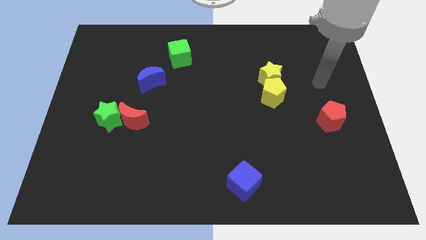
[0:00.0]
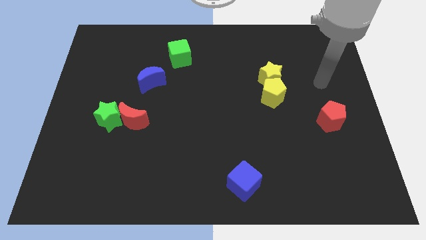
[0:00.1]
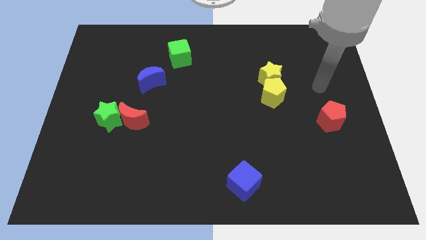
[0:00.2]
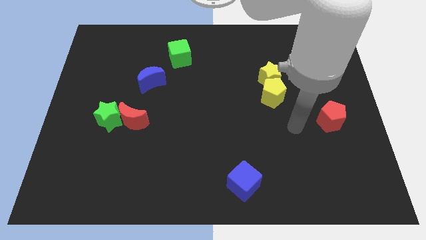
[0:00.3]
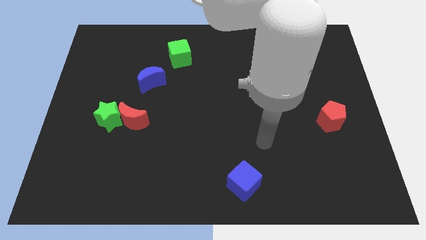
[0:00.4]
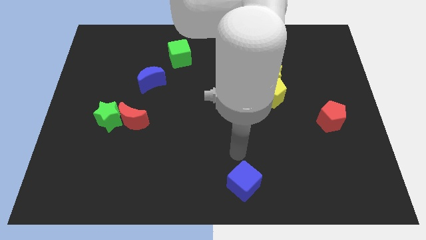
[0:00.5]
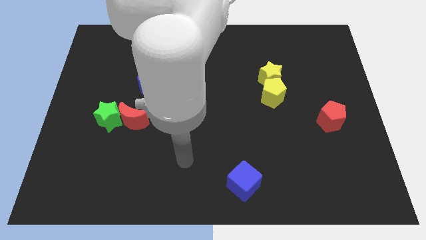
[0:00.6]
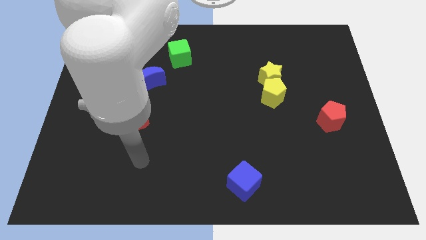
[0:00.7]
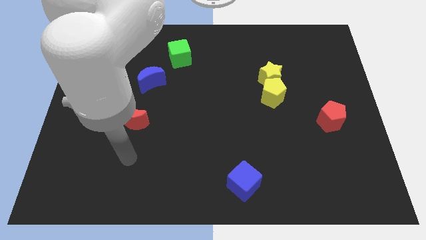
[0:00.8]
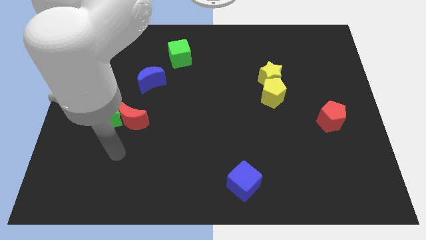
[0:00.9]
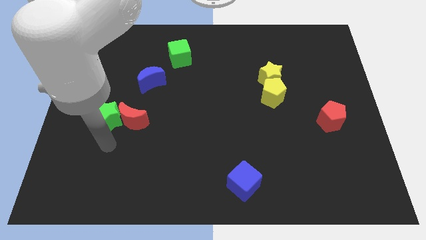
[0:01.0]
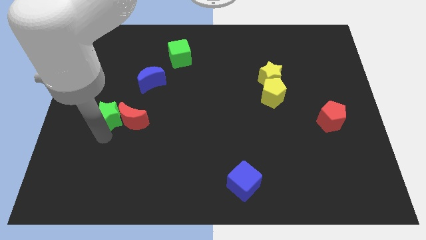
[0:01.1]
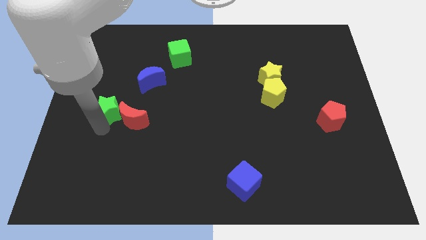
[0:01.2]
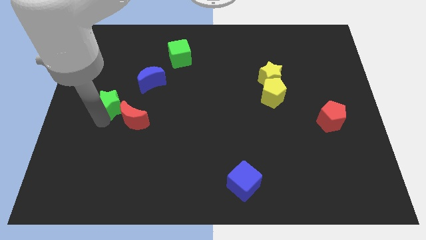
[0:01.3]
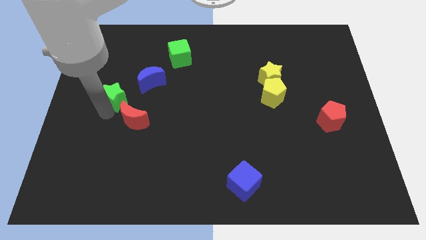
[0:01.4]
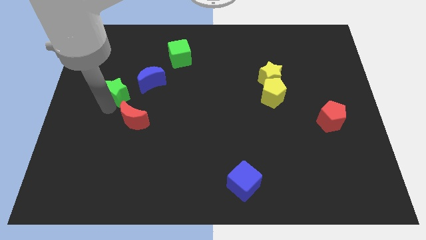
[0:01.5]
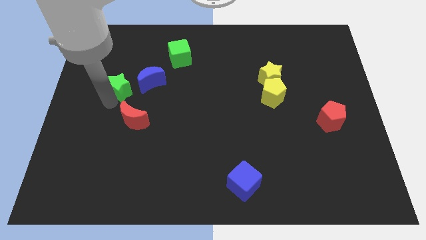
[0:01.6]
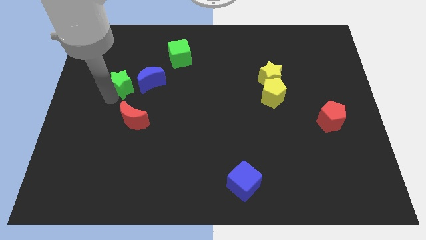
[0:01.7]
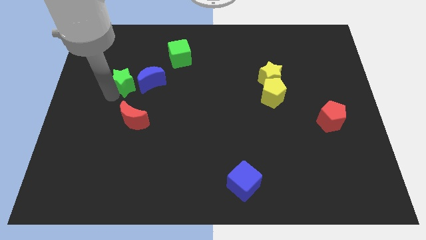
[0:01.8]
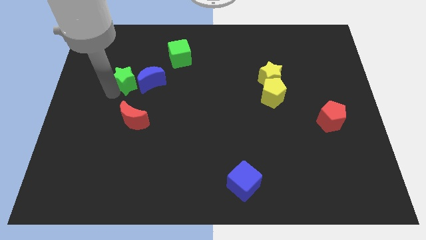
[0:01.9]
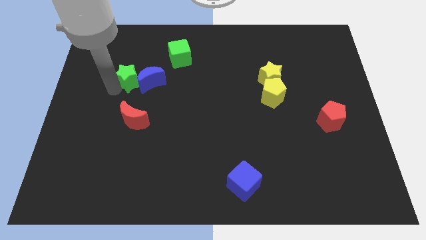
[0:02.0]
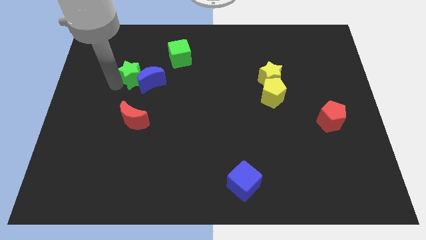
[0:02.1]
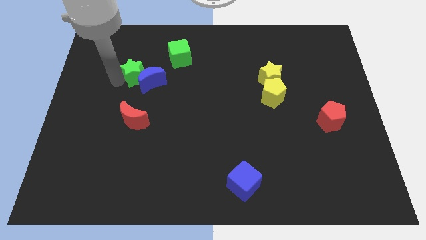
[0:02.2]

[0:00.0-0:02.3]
move the green star close to the blue moon

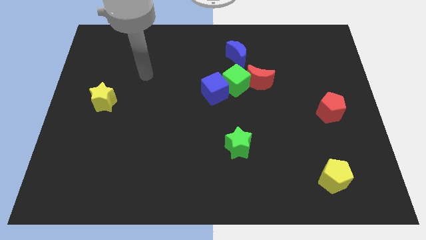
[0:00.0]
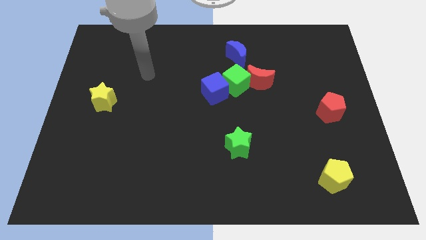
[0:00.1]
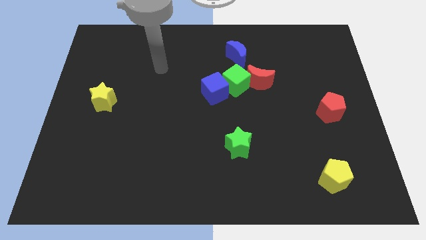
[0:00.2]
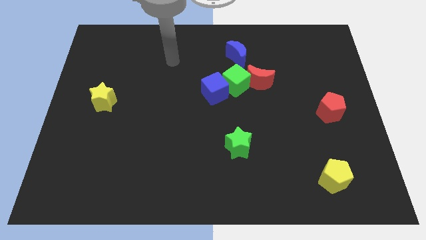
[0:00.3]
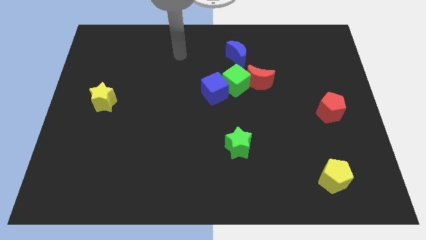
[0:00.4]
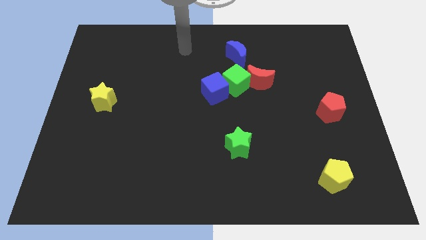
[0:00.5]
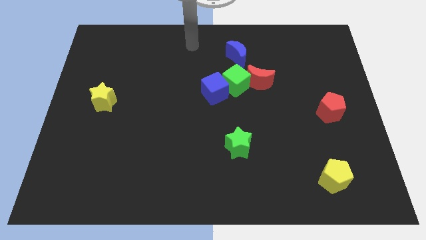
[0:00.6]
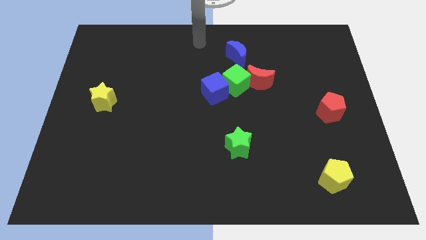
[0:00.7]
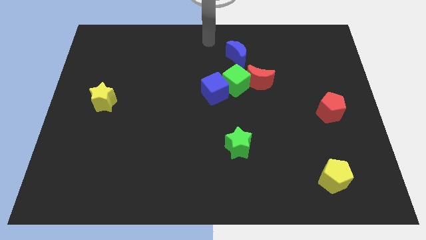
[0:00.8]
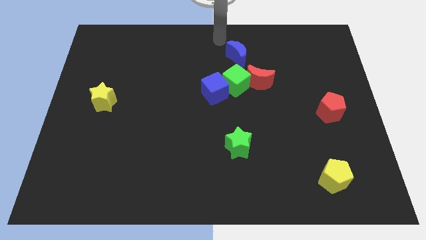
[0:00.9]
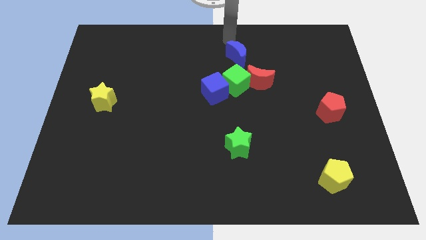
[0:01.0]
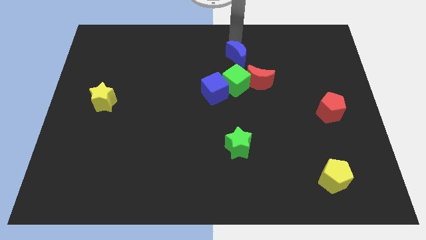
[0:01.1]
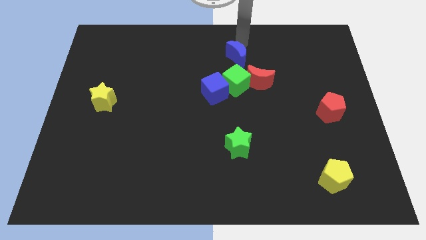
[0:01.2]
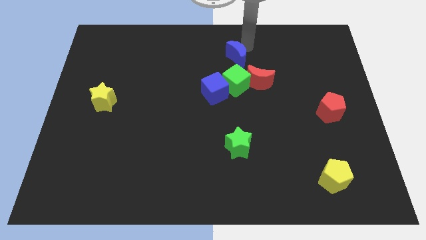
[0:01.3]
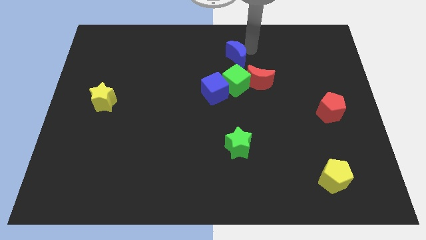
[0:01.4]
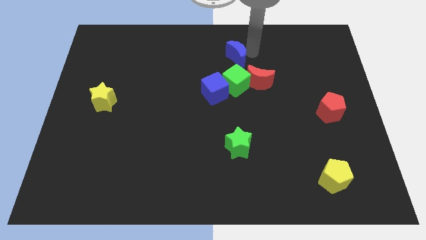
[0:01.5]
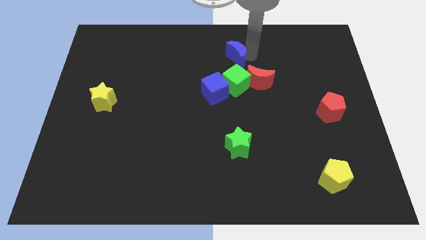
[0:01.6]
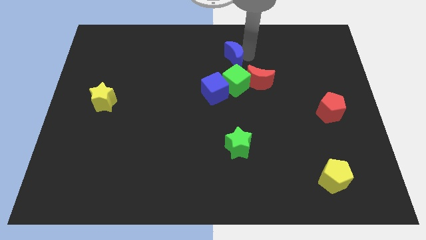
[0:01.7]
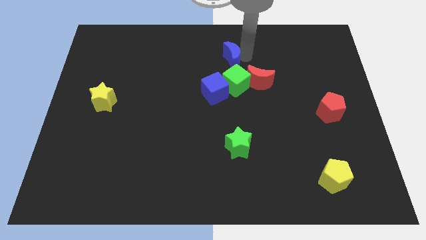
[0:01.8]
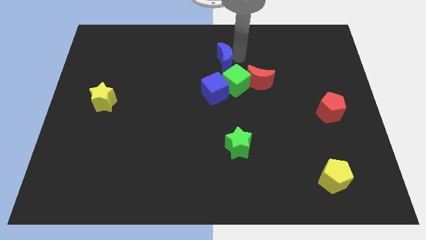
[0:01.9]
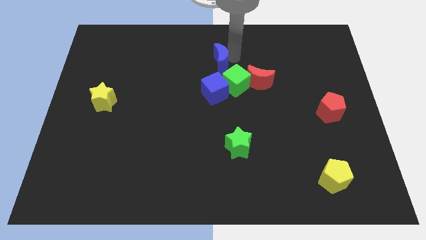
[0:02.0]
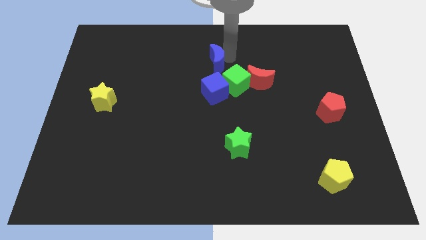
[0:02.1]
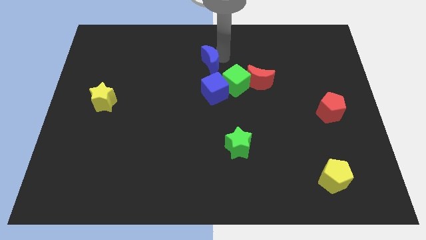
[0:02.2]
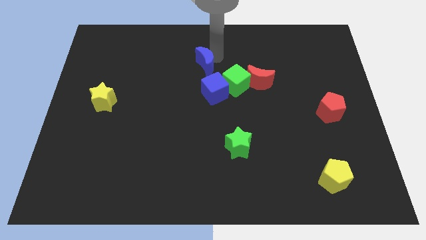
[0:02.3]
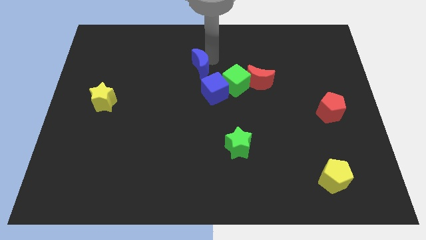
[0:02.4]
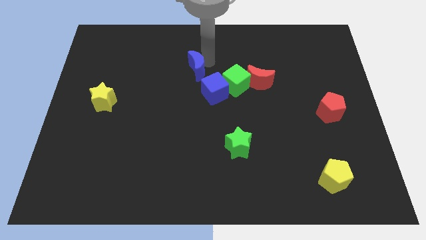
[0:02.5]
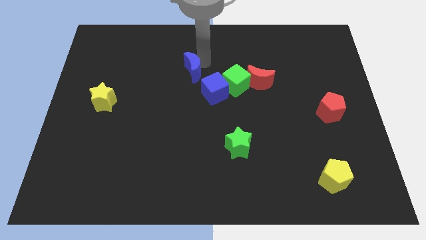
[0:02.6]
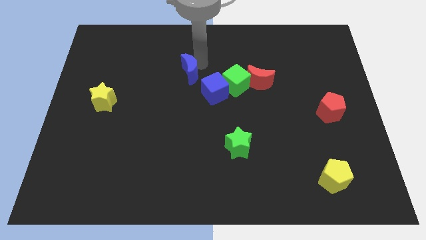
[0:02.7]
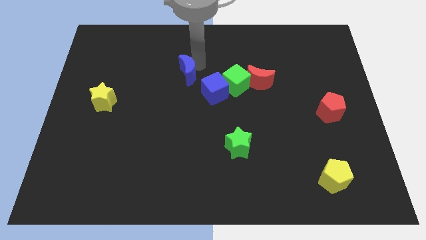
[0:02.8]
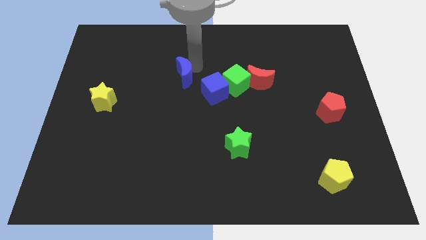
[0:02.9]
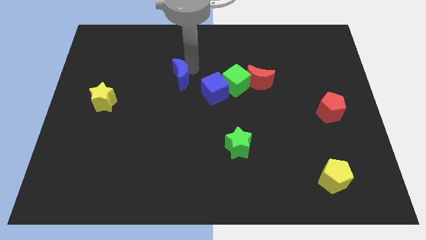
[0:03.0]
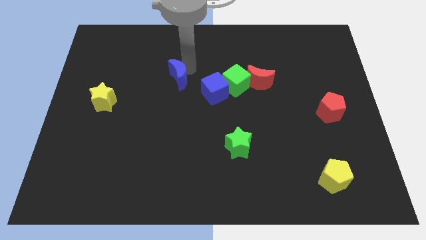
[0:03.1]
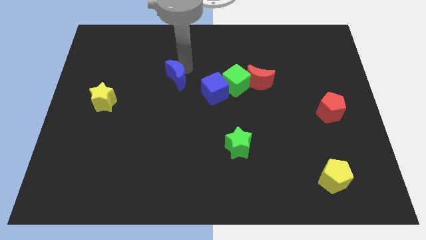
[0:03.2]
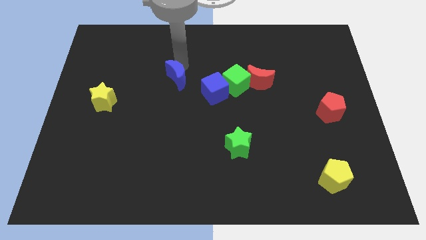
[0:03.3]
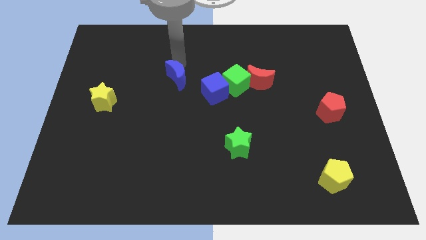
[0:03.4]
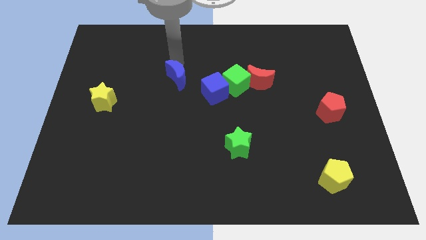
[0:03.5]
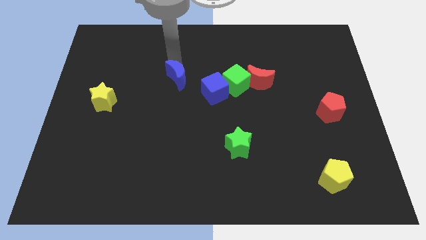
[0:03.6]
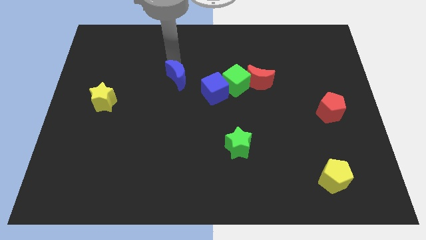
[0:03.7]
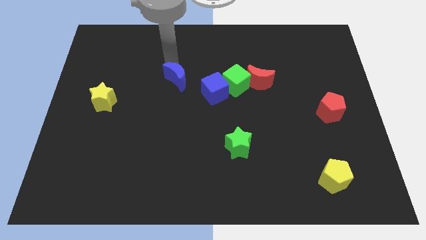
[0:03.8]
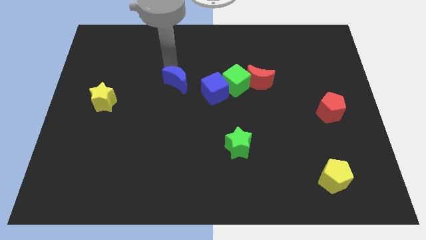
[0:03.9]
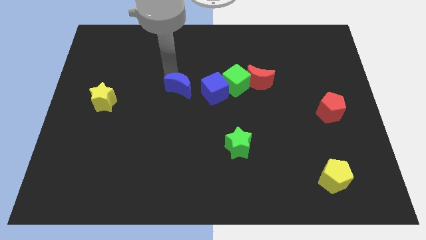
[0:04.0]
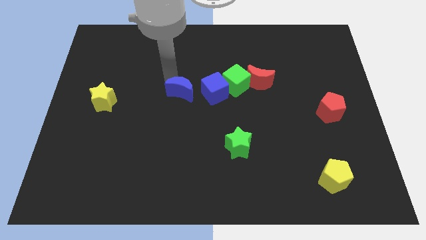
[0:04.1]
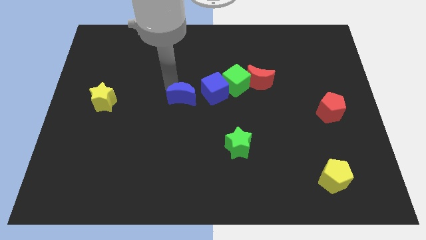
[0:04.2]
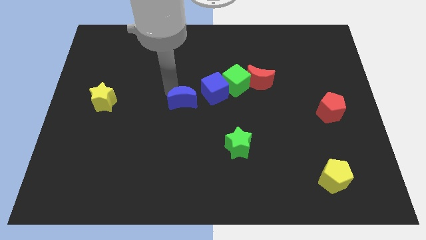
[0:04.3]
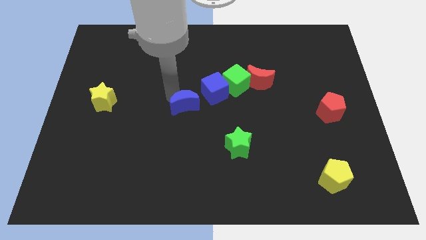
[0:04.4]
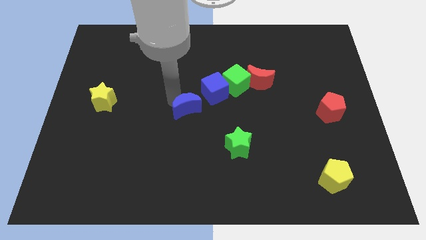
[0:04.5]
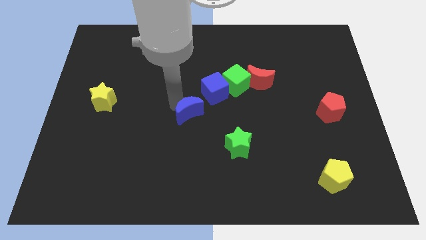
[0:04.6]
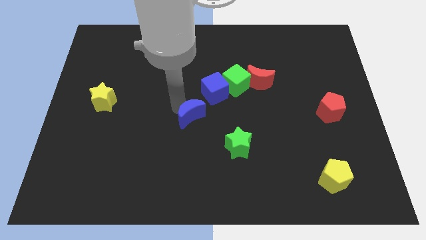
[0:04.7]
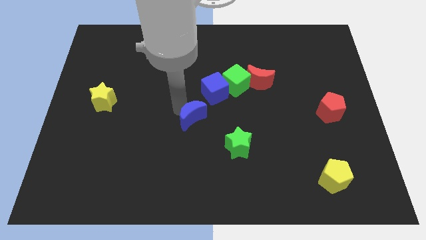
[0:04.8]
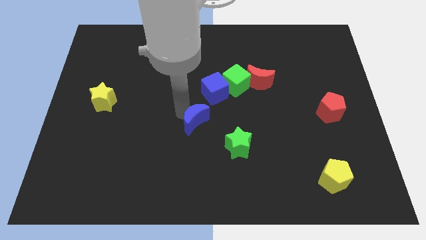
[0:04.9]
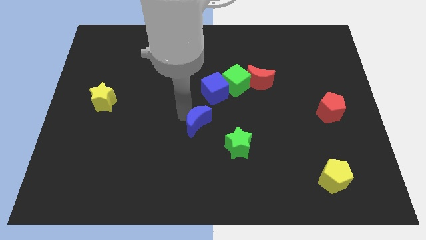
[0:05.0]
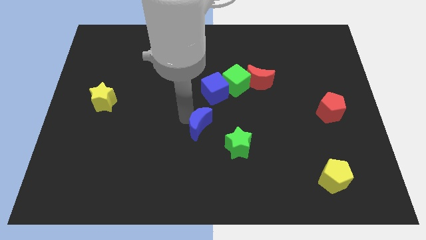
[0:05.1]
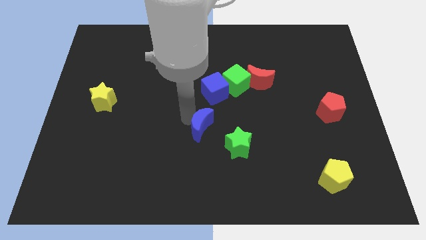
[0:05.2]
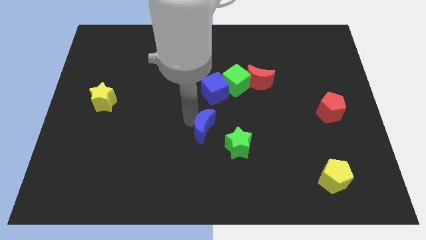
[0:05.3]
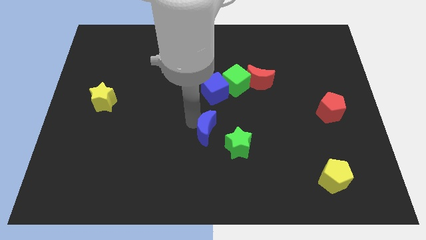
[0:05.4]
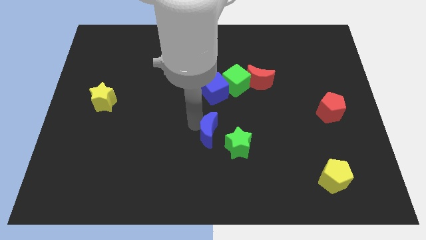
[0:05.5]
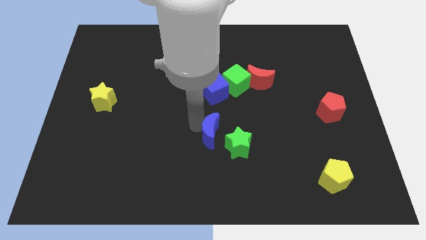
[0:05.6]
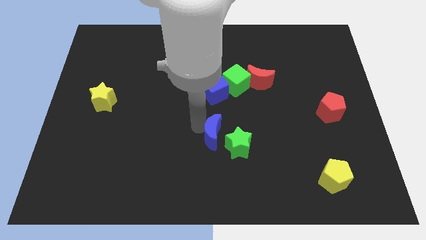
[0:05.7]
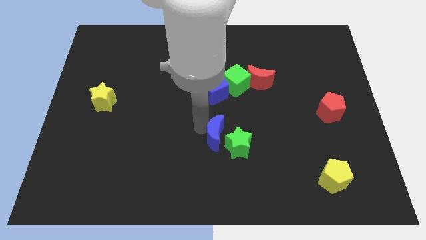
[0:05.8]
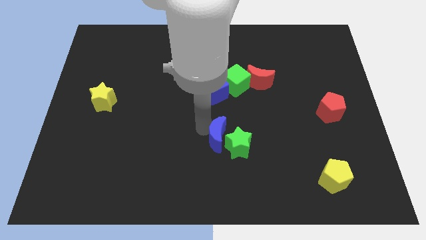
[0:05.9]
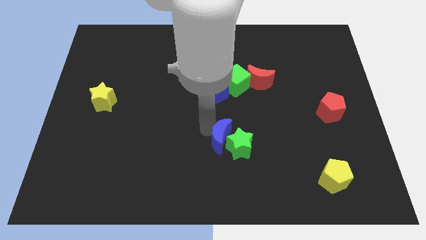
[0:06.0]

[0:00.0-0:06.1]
slide the blue moon close to the green star
